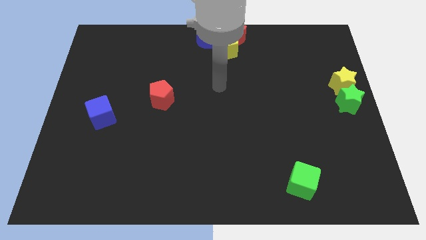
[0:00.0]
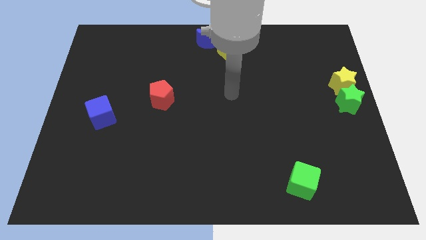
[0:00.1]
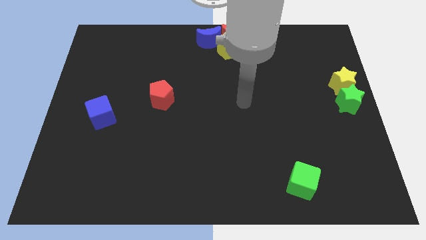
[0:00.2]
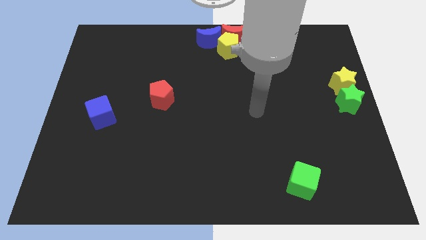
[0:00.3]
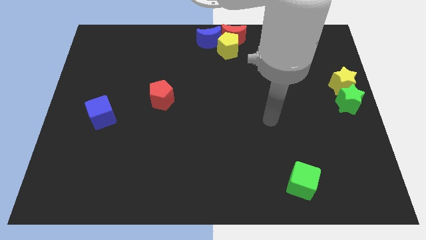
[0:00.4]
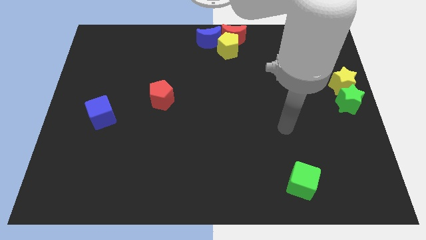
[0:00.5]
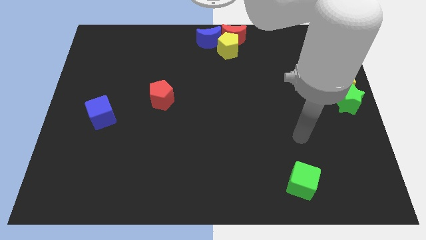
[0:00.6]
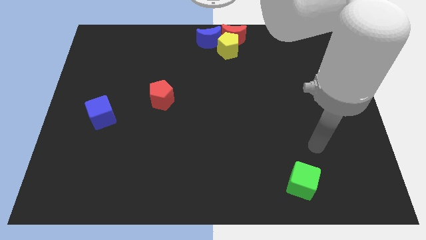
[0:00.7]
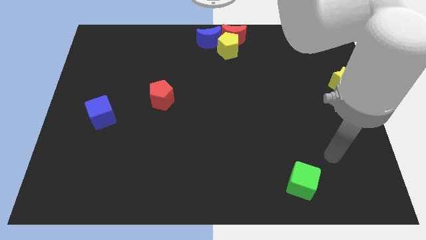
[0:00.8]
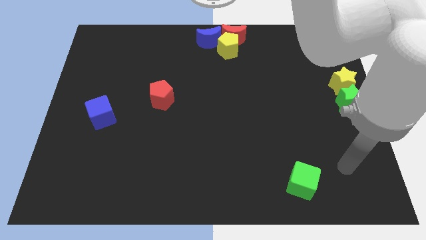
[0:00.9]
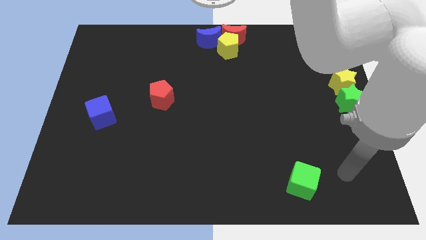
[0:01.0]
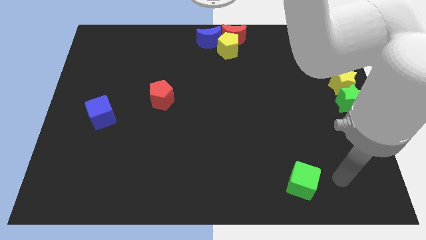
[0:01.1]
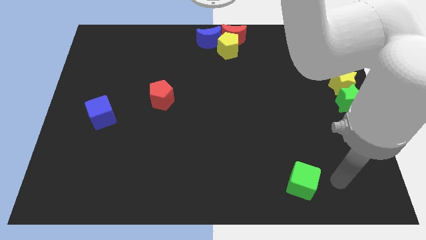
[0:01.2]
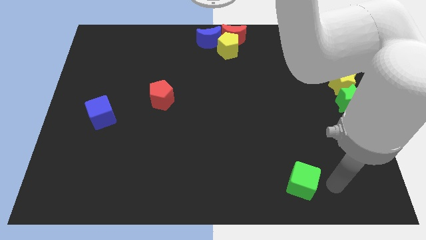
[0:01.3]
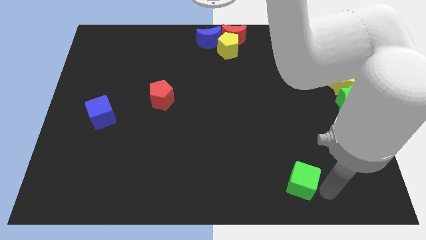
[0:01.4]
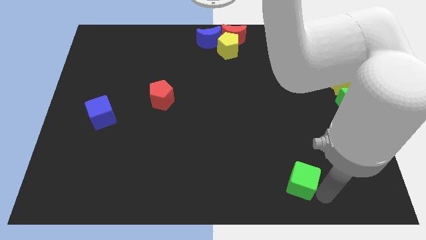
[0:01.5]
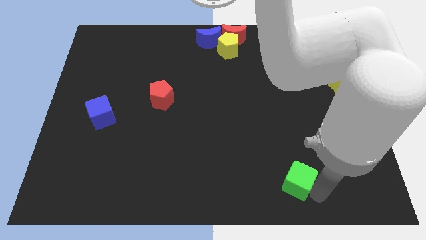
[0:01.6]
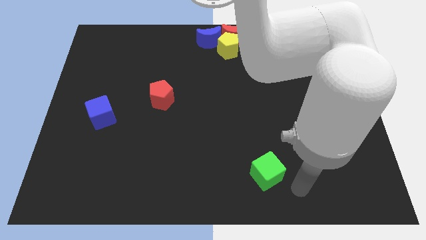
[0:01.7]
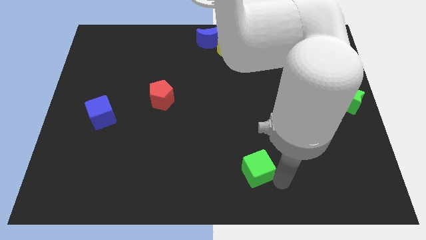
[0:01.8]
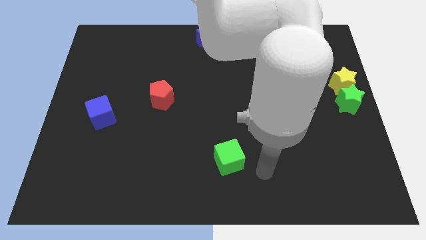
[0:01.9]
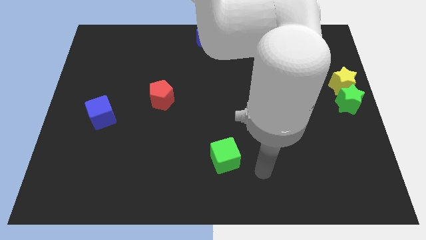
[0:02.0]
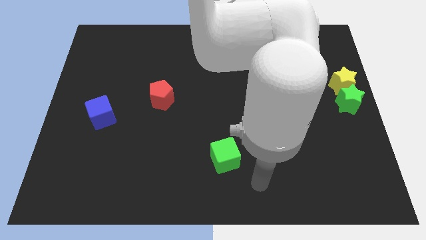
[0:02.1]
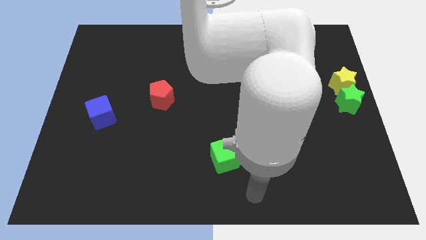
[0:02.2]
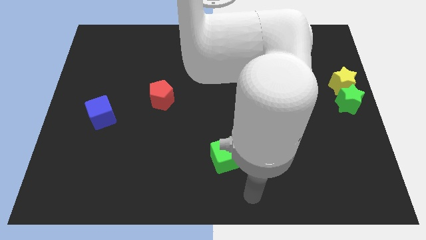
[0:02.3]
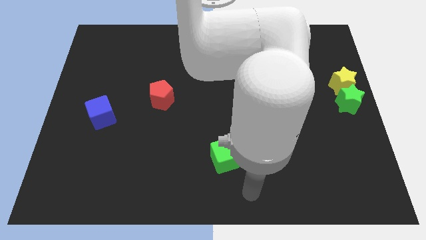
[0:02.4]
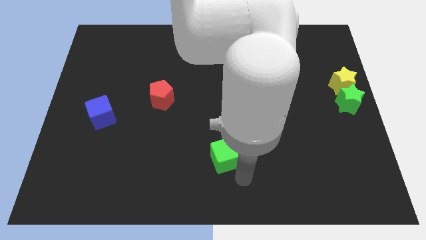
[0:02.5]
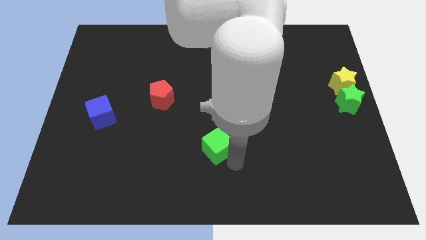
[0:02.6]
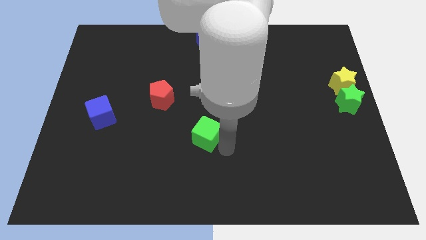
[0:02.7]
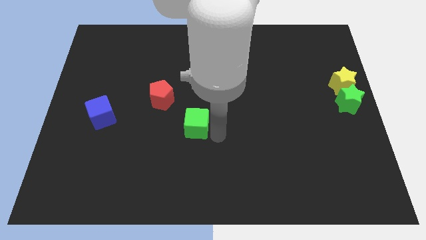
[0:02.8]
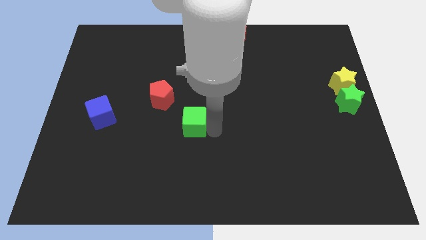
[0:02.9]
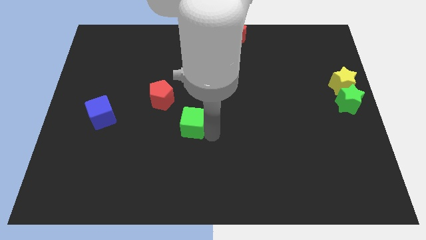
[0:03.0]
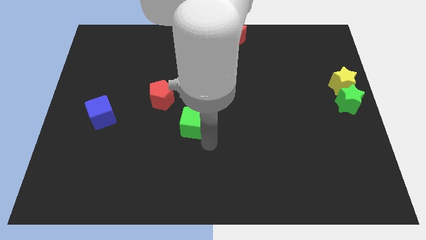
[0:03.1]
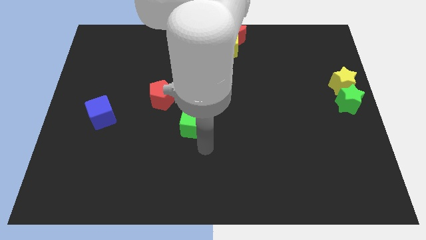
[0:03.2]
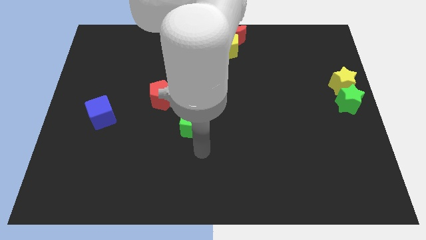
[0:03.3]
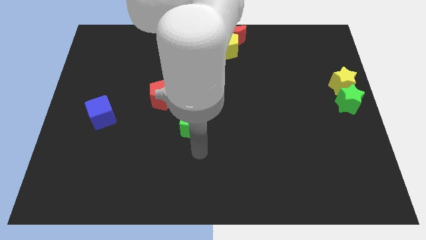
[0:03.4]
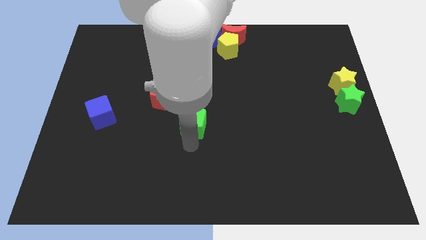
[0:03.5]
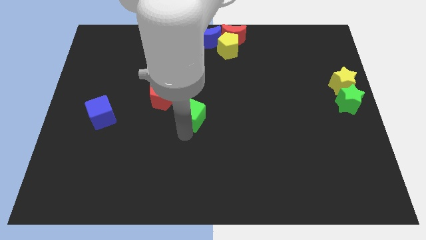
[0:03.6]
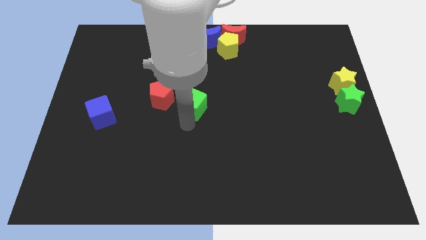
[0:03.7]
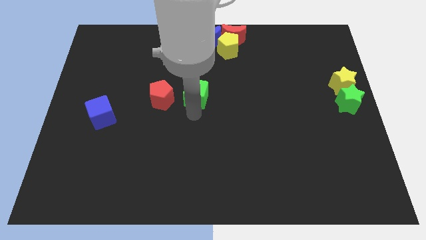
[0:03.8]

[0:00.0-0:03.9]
place the green cube to the right of the red pentagon

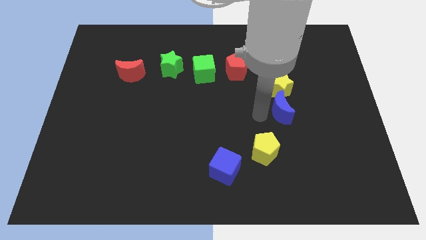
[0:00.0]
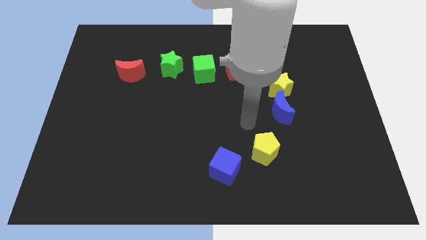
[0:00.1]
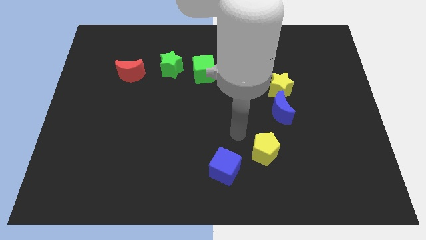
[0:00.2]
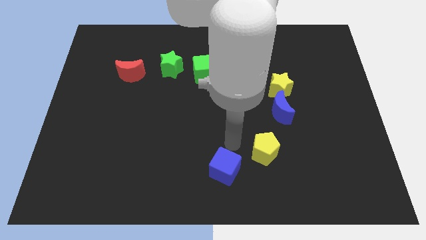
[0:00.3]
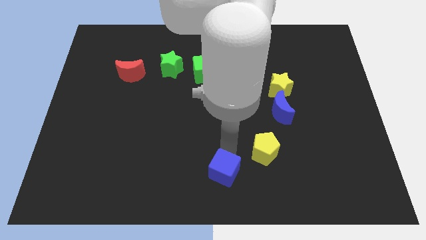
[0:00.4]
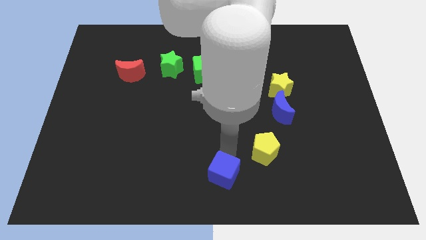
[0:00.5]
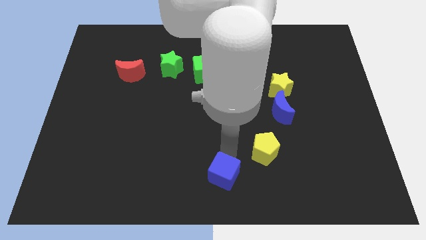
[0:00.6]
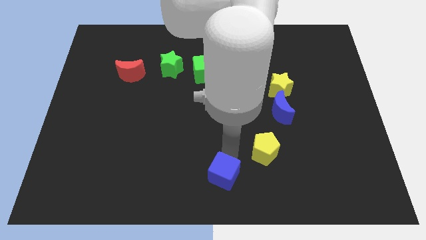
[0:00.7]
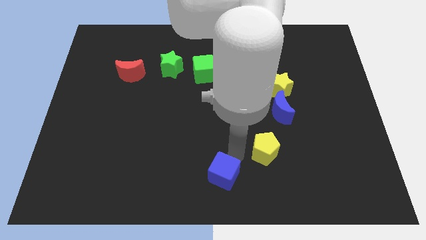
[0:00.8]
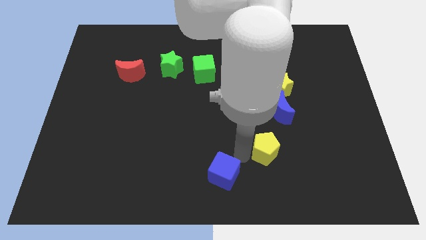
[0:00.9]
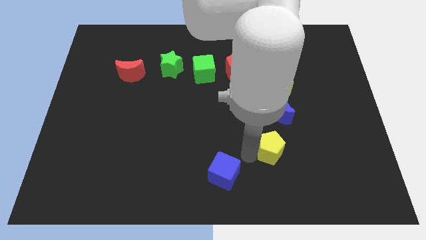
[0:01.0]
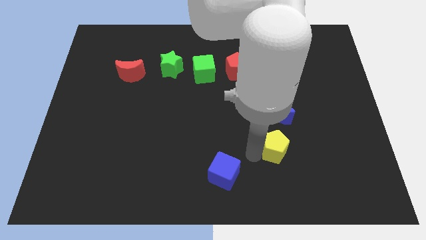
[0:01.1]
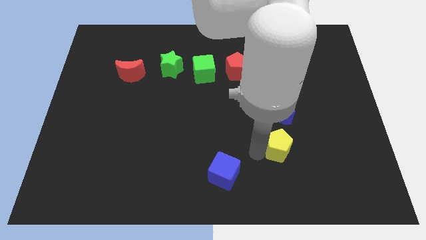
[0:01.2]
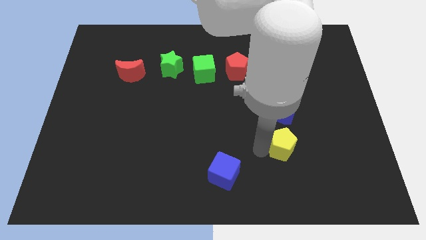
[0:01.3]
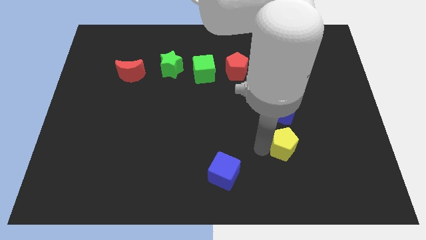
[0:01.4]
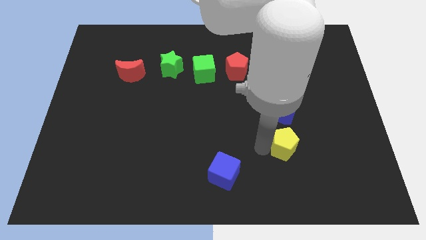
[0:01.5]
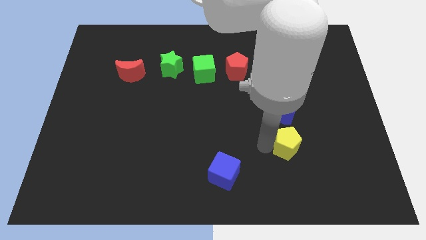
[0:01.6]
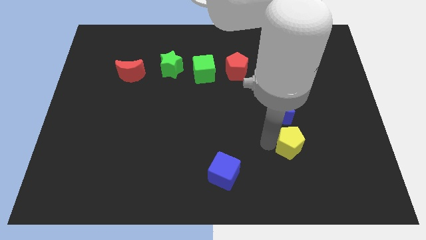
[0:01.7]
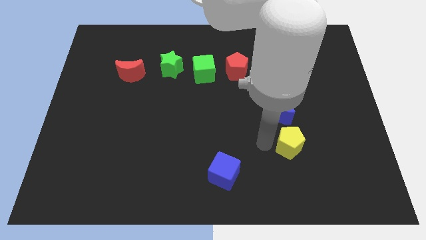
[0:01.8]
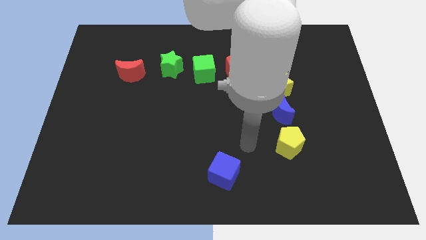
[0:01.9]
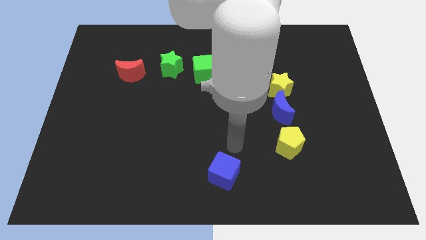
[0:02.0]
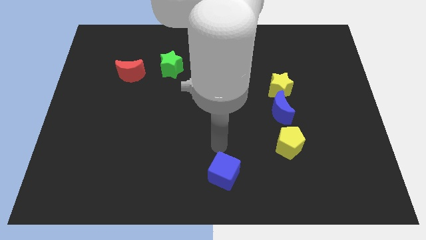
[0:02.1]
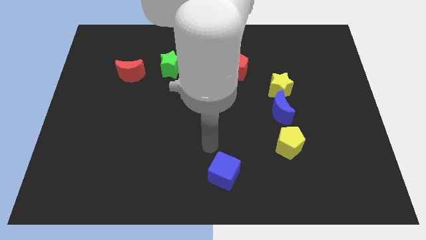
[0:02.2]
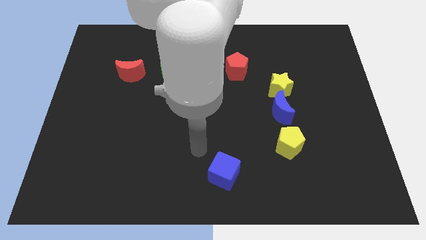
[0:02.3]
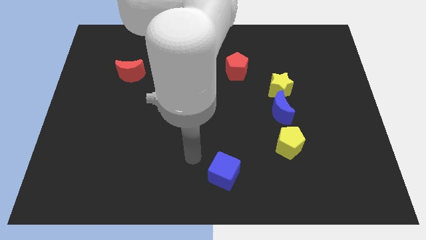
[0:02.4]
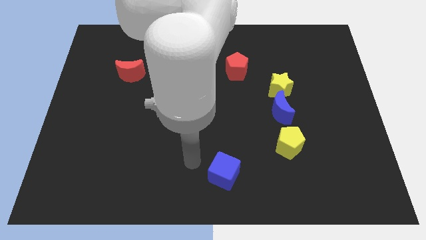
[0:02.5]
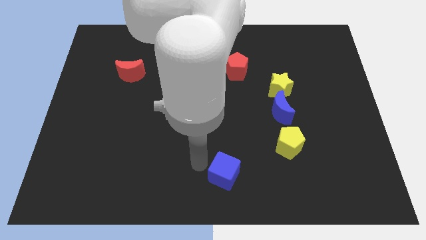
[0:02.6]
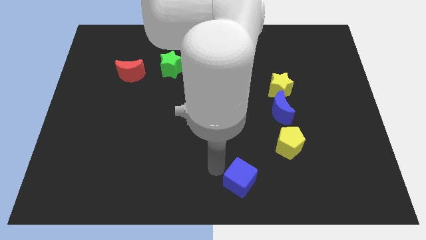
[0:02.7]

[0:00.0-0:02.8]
move the yellow pentagon and the blue cube in opposite directions

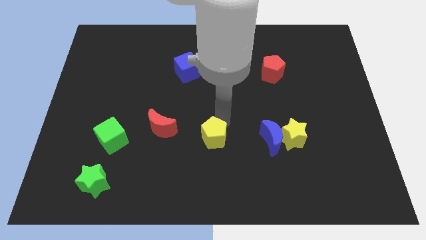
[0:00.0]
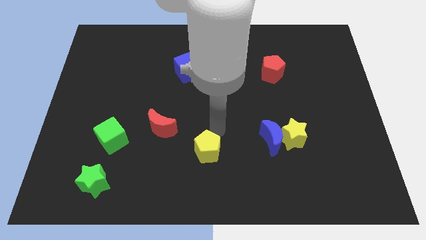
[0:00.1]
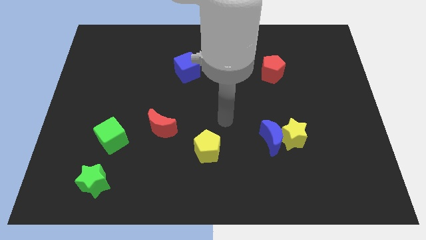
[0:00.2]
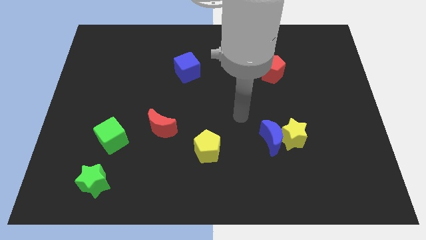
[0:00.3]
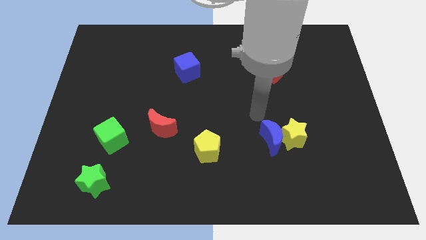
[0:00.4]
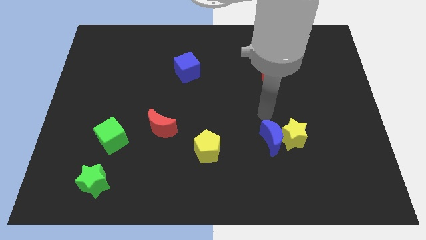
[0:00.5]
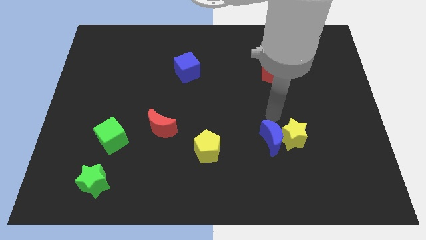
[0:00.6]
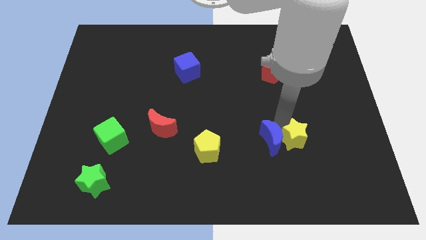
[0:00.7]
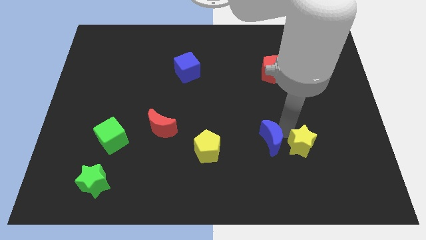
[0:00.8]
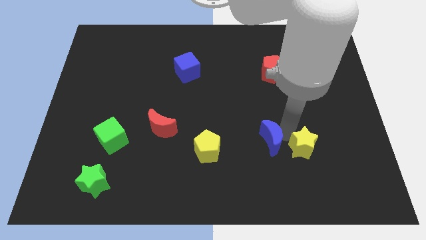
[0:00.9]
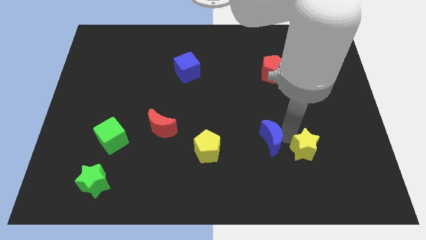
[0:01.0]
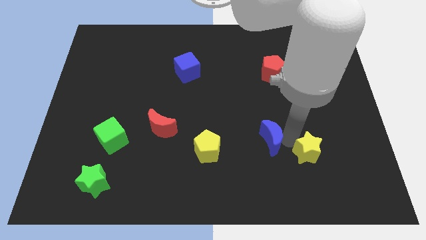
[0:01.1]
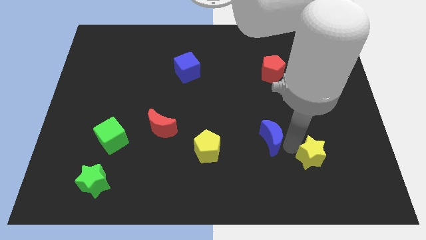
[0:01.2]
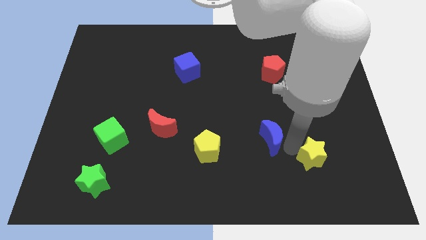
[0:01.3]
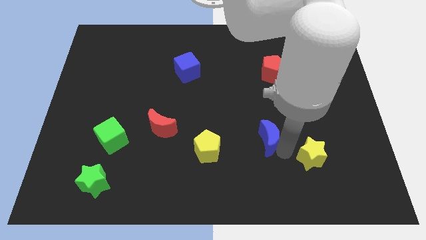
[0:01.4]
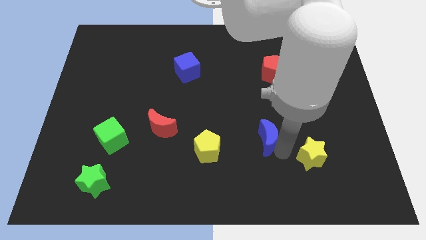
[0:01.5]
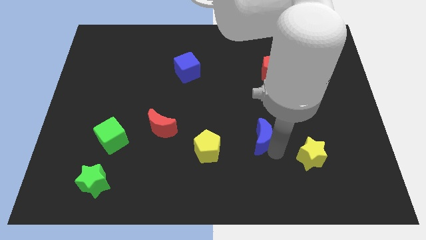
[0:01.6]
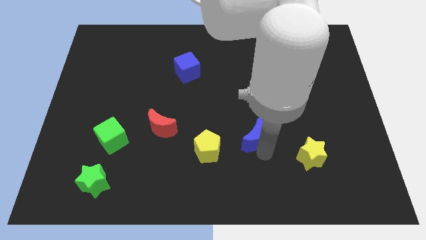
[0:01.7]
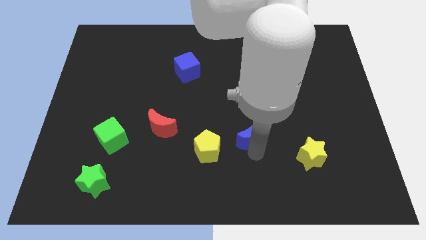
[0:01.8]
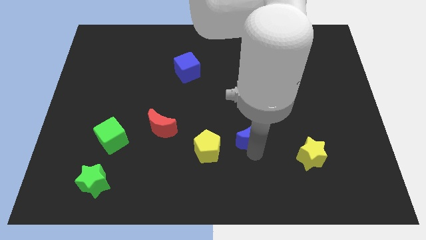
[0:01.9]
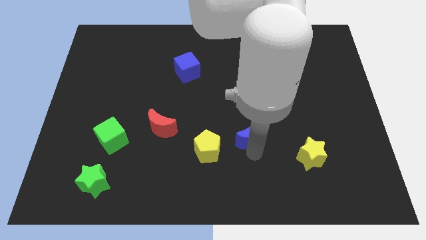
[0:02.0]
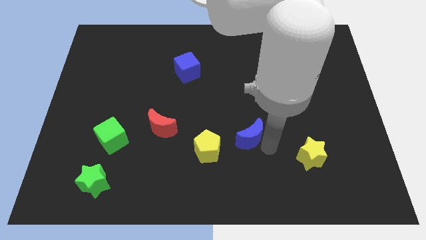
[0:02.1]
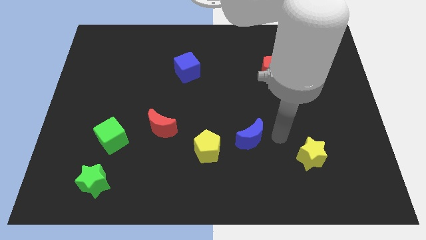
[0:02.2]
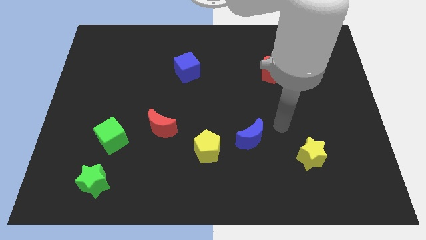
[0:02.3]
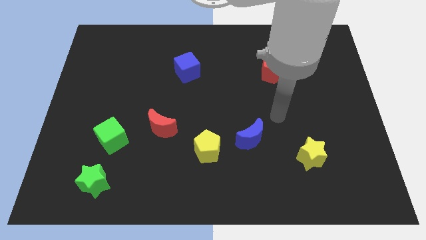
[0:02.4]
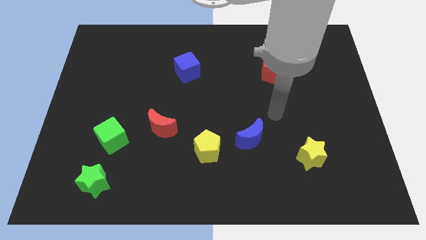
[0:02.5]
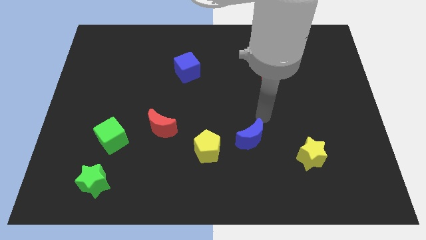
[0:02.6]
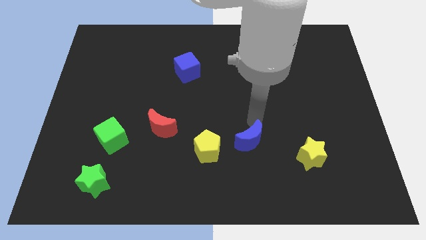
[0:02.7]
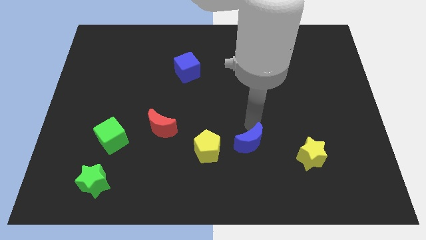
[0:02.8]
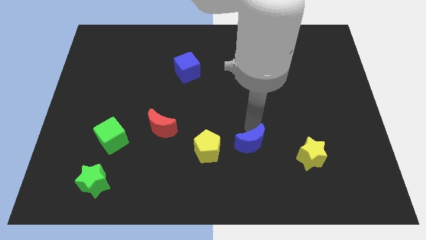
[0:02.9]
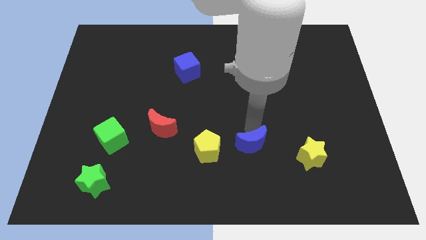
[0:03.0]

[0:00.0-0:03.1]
separate blue moon and yellow star
